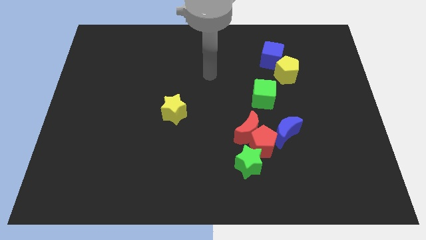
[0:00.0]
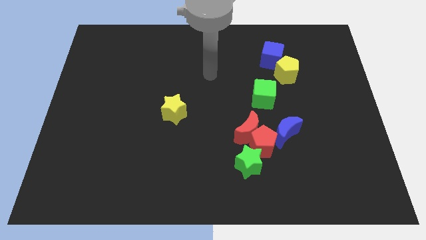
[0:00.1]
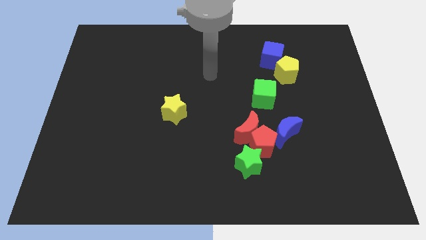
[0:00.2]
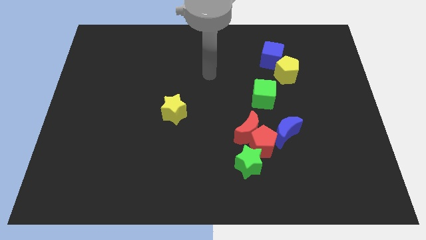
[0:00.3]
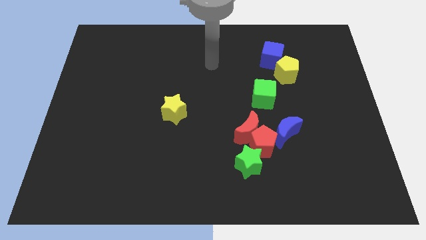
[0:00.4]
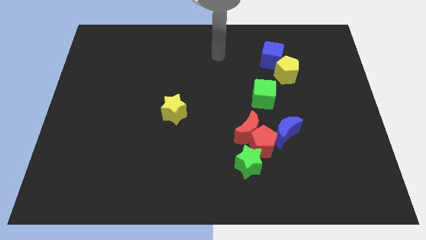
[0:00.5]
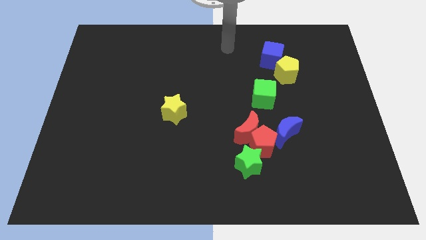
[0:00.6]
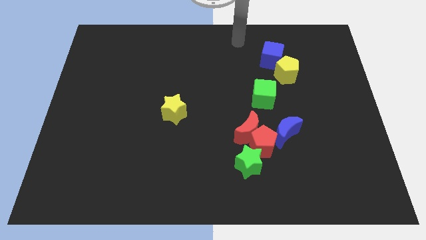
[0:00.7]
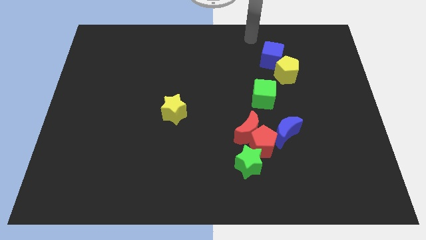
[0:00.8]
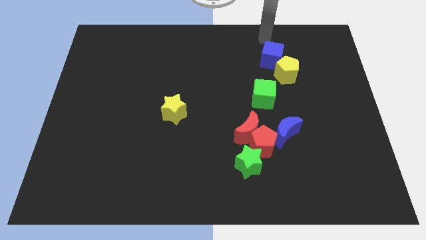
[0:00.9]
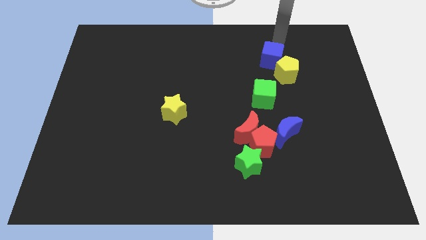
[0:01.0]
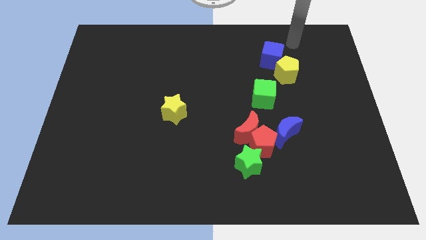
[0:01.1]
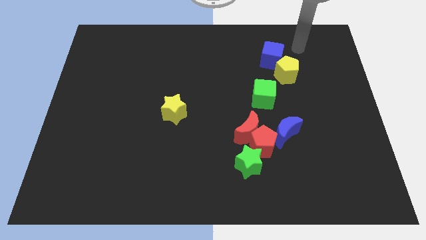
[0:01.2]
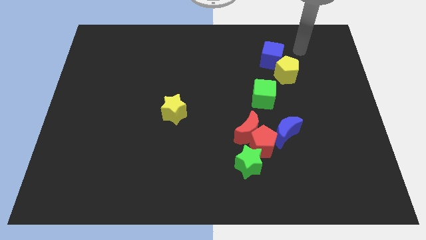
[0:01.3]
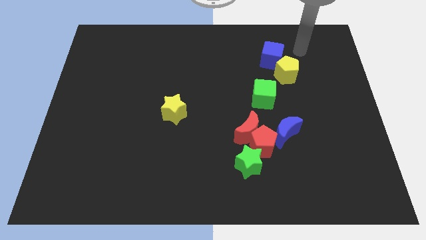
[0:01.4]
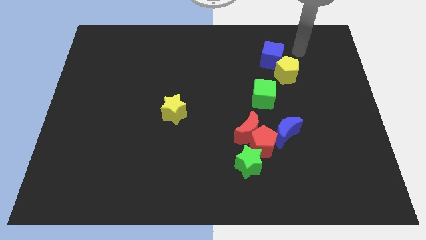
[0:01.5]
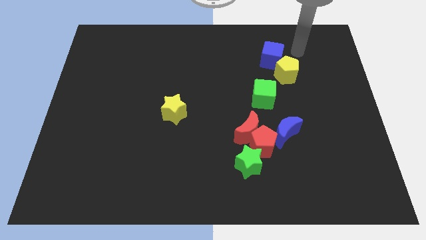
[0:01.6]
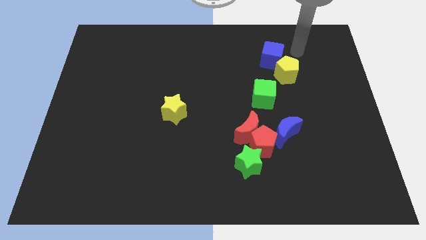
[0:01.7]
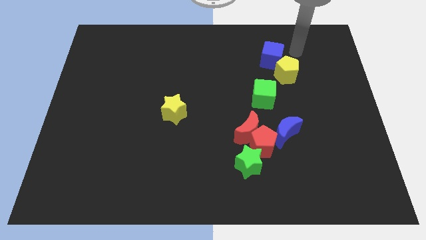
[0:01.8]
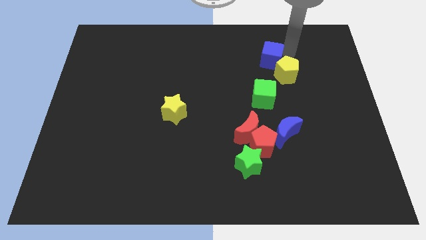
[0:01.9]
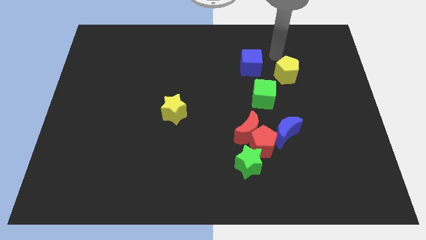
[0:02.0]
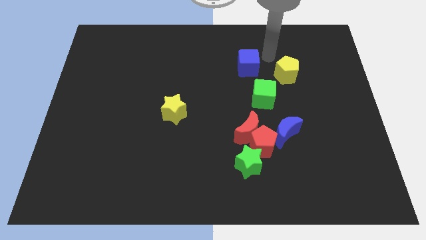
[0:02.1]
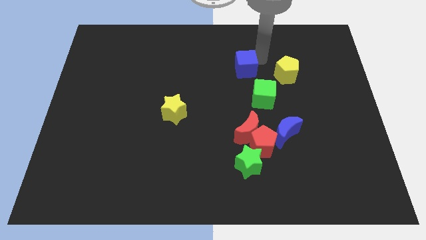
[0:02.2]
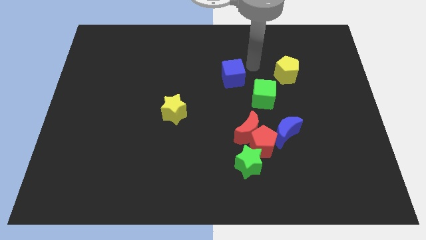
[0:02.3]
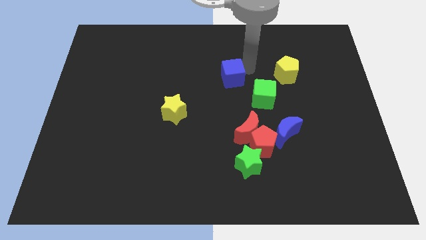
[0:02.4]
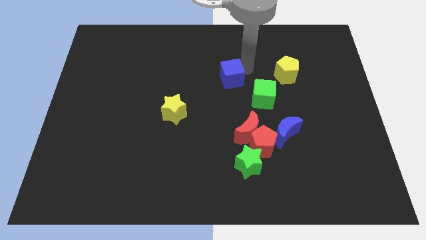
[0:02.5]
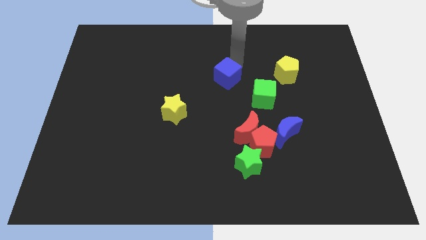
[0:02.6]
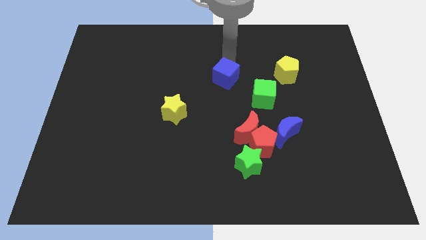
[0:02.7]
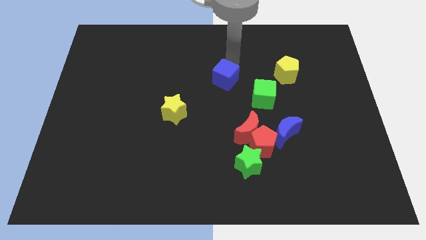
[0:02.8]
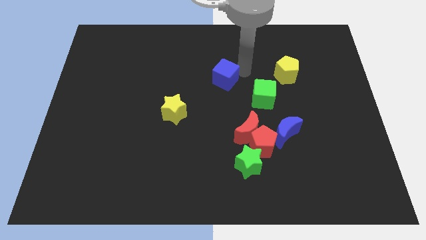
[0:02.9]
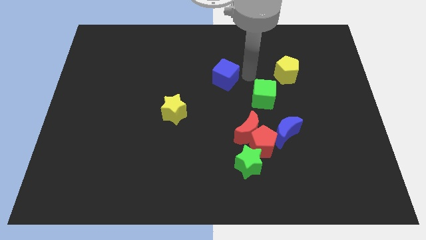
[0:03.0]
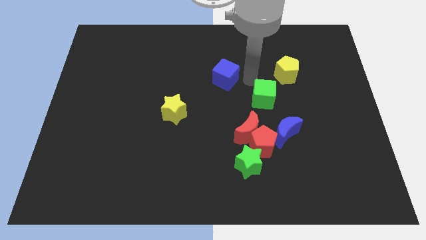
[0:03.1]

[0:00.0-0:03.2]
move the blue cube diagonally left to the green cube

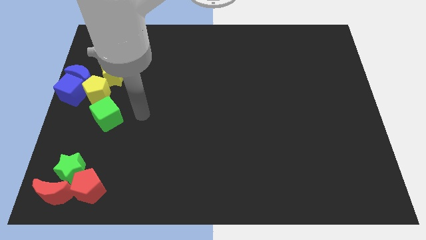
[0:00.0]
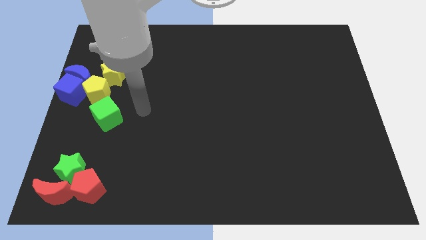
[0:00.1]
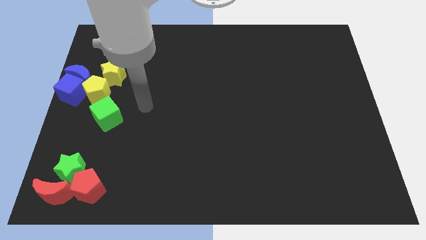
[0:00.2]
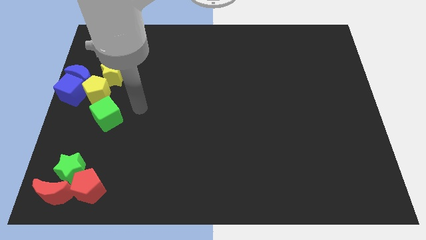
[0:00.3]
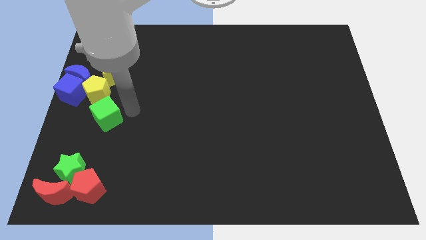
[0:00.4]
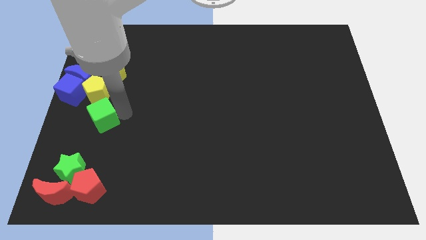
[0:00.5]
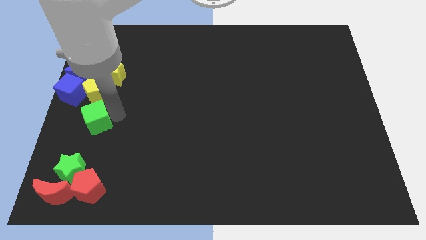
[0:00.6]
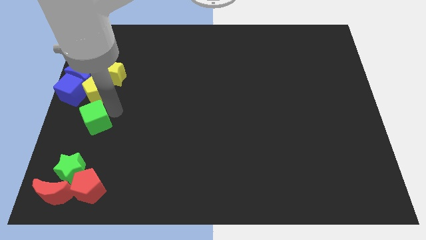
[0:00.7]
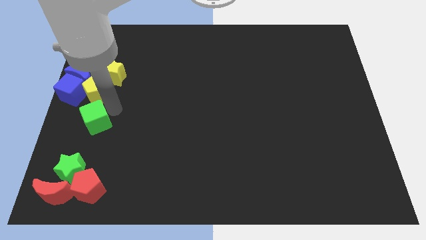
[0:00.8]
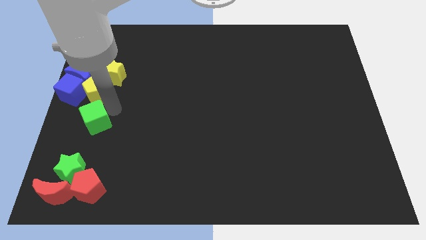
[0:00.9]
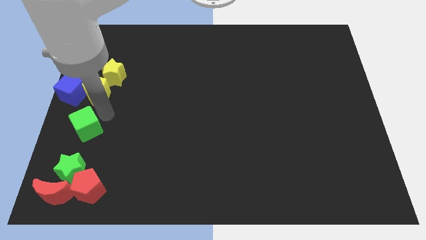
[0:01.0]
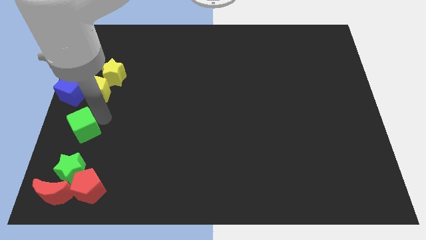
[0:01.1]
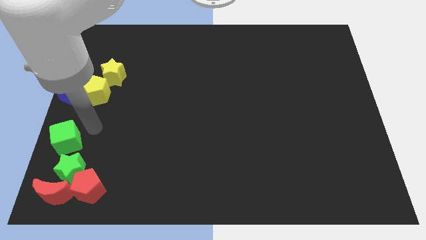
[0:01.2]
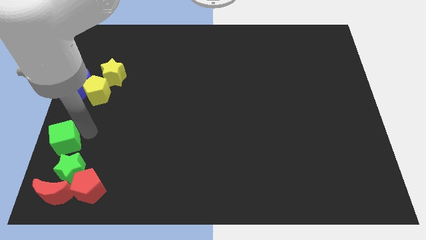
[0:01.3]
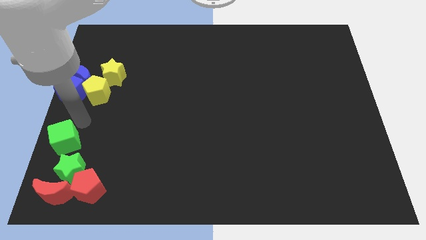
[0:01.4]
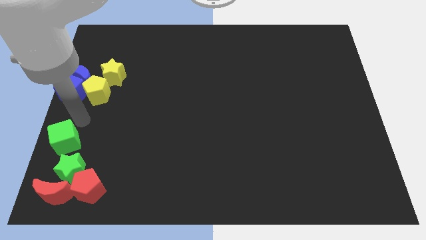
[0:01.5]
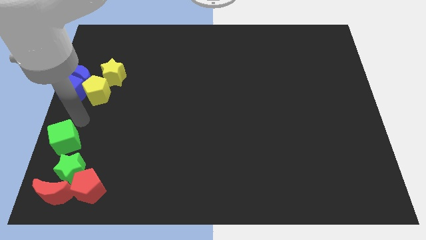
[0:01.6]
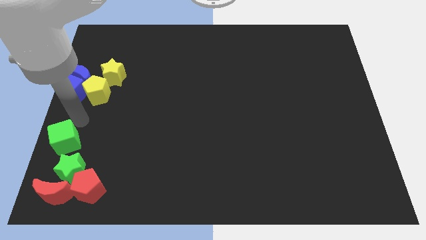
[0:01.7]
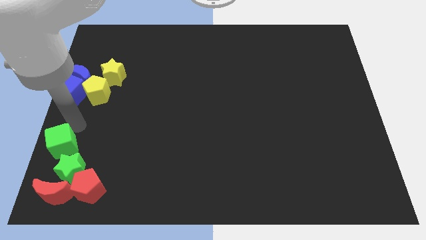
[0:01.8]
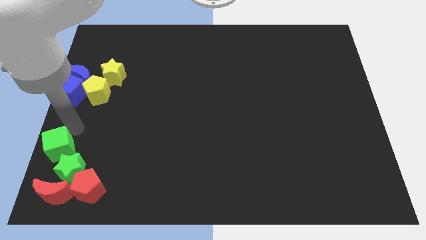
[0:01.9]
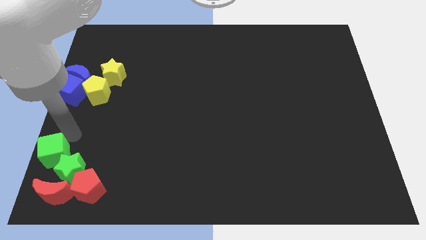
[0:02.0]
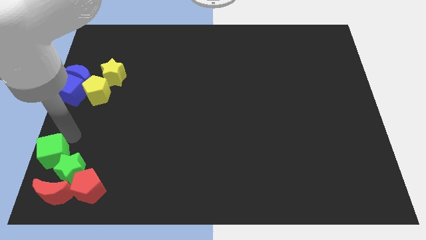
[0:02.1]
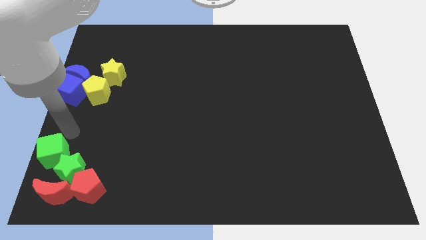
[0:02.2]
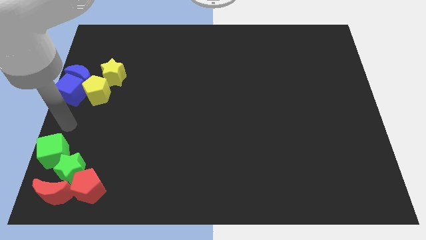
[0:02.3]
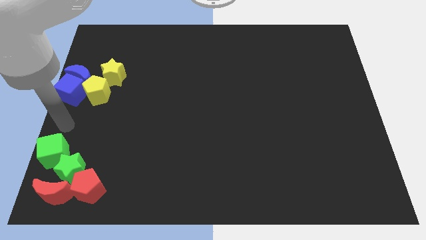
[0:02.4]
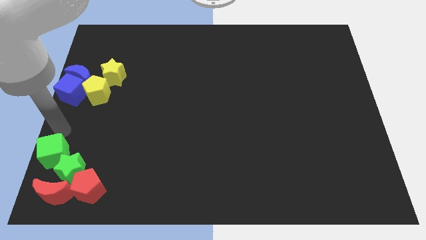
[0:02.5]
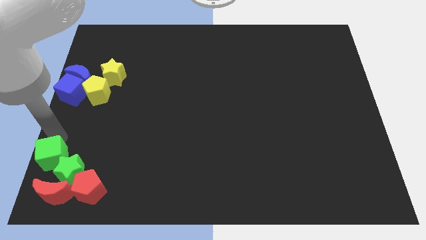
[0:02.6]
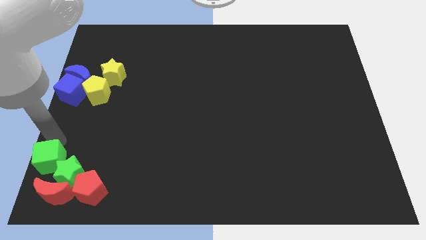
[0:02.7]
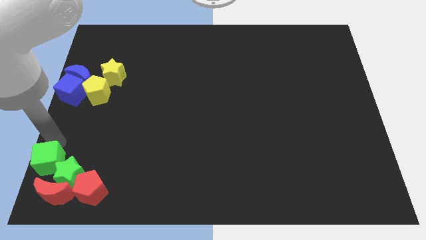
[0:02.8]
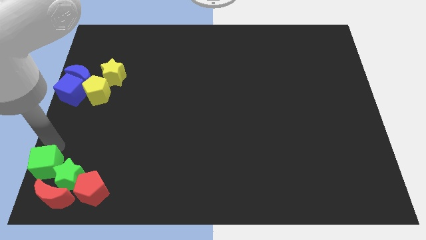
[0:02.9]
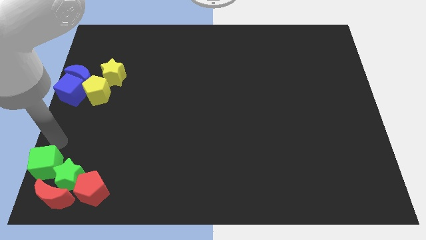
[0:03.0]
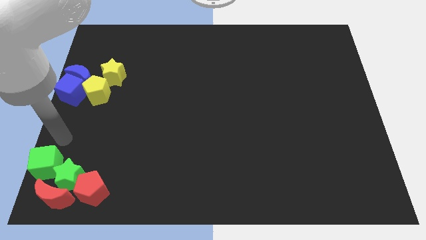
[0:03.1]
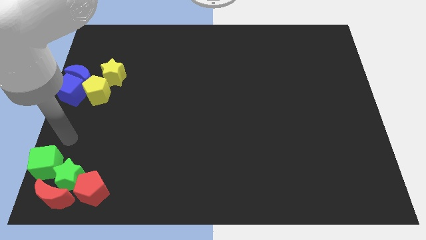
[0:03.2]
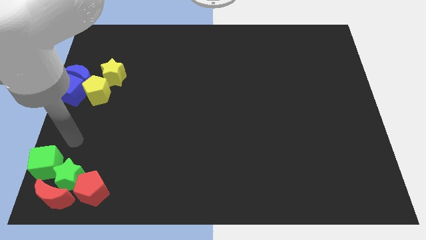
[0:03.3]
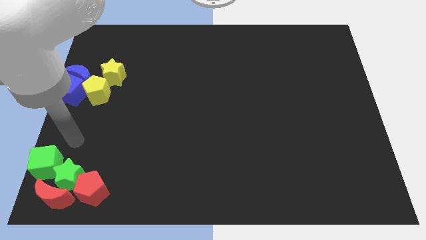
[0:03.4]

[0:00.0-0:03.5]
push the green cube into green star

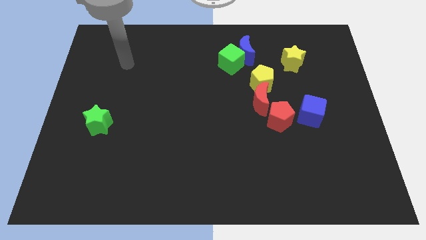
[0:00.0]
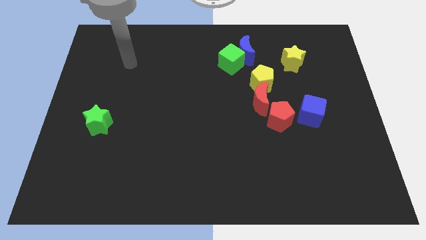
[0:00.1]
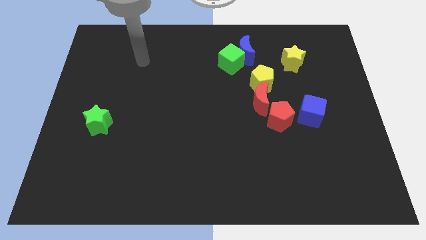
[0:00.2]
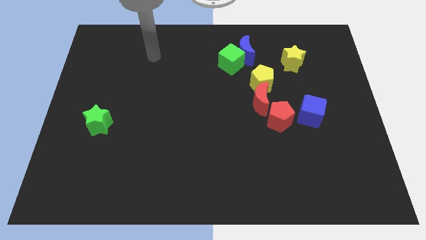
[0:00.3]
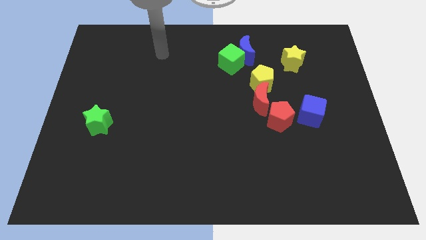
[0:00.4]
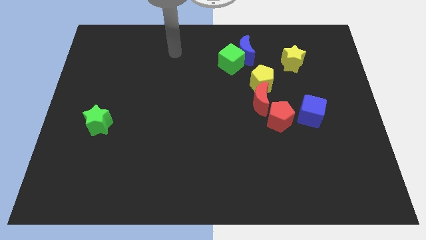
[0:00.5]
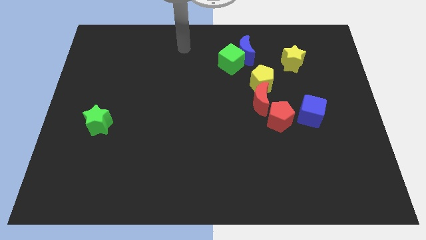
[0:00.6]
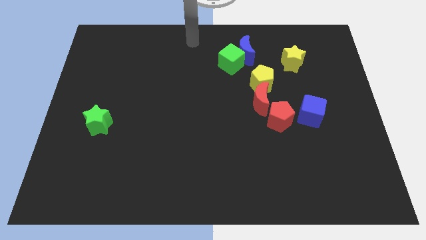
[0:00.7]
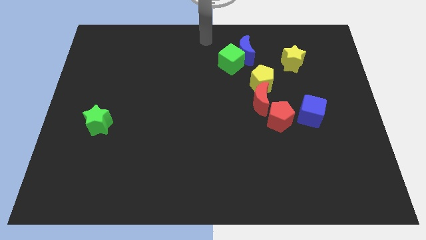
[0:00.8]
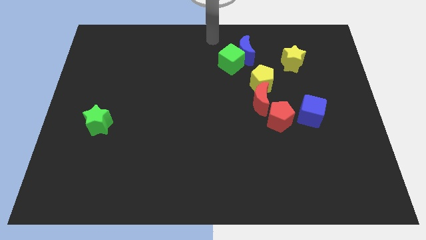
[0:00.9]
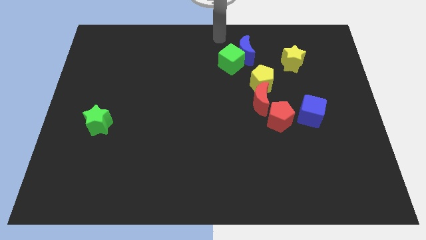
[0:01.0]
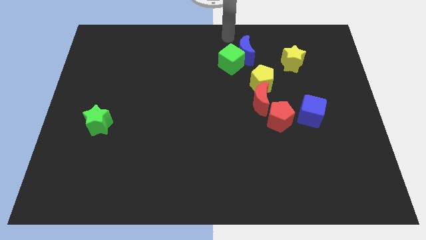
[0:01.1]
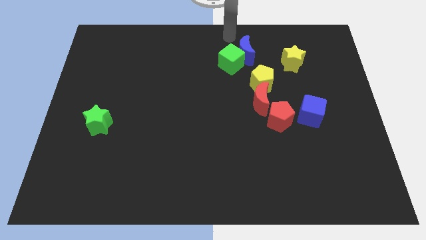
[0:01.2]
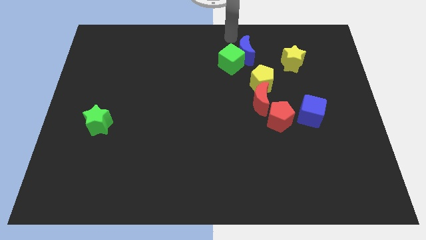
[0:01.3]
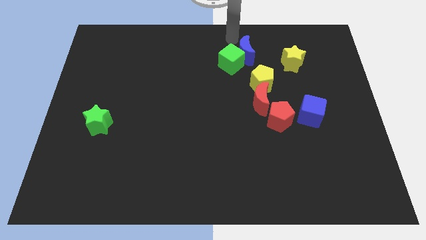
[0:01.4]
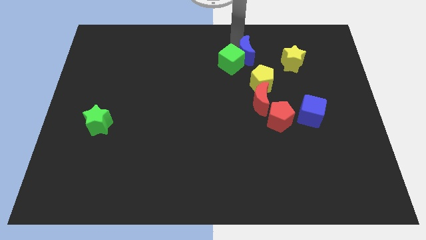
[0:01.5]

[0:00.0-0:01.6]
place your arm on the left top of blue crescent

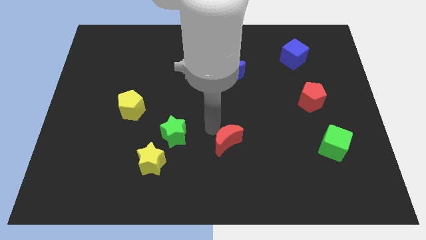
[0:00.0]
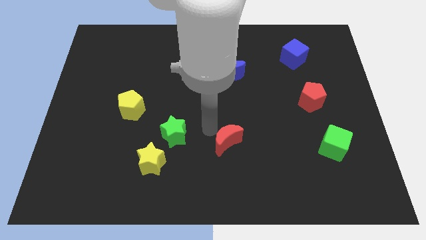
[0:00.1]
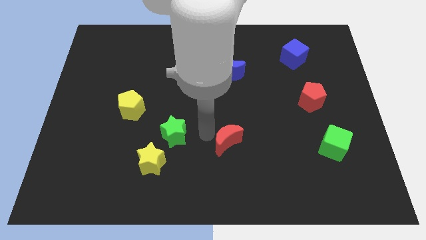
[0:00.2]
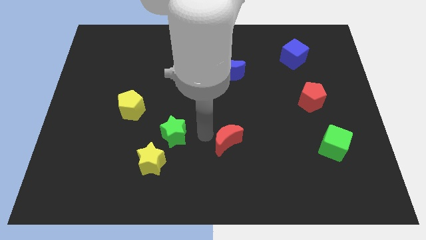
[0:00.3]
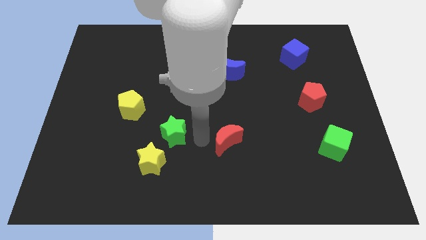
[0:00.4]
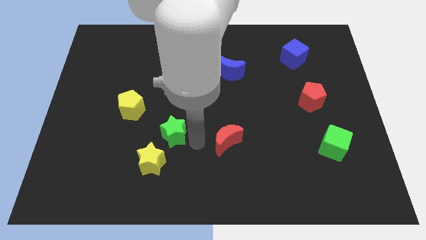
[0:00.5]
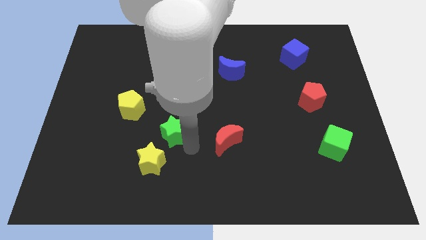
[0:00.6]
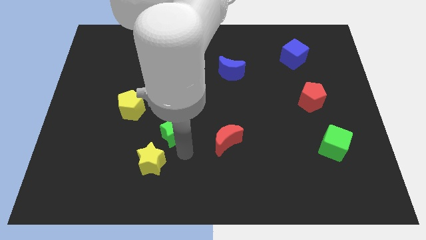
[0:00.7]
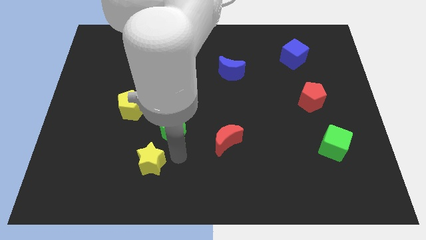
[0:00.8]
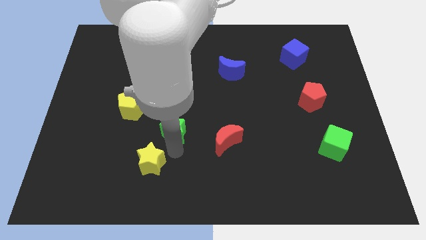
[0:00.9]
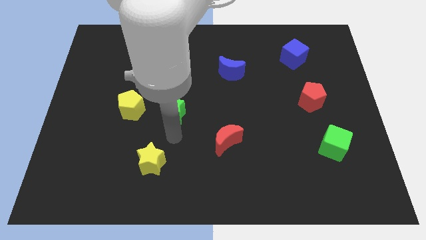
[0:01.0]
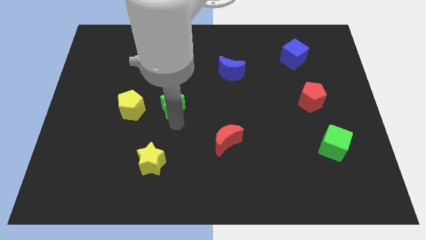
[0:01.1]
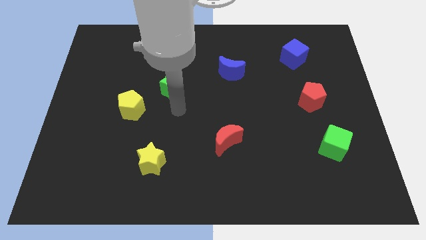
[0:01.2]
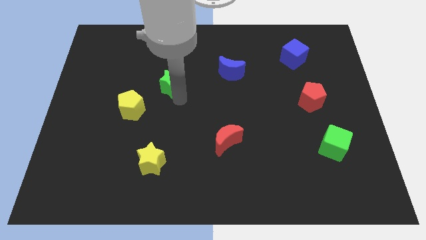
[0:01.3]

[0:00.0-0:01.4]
push green star slightly towards up
